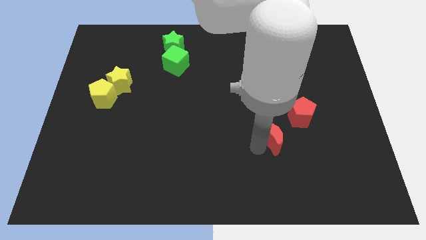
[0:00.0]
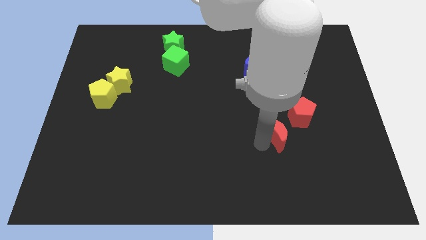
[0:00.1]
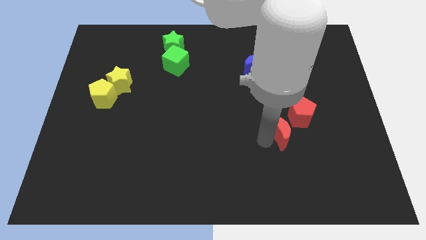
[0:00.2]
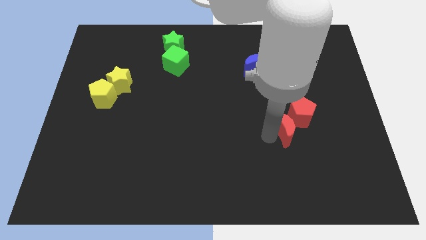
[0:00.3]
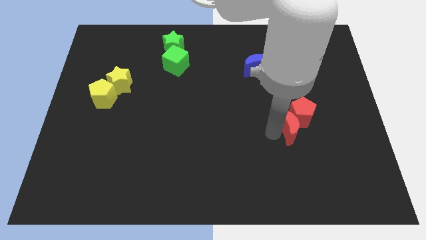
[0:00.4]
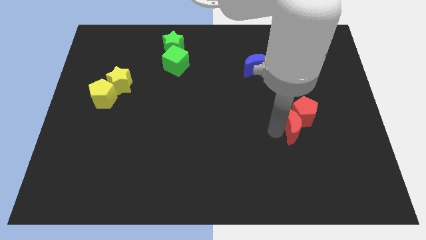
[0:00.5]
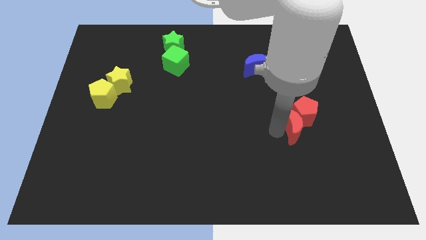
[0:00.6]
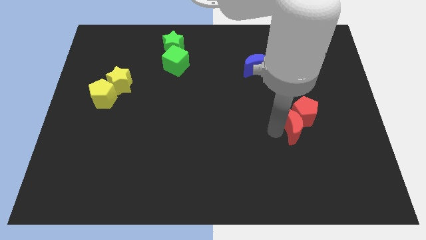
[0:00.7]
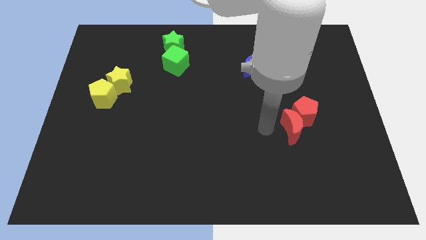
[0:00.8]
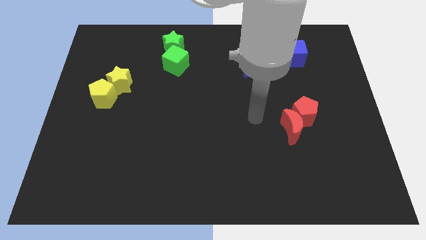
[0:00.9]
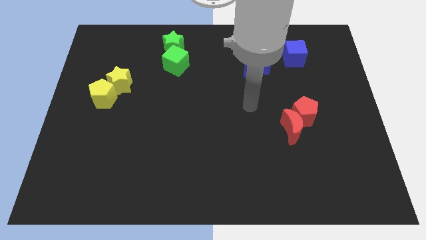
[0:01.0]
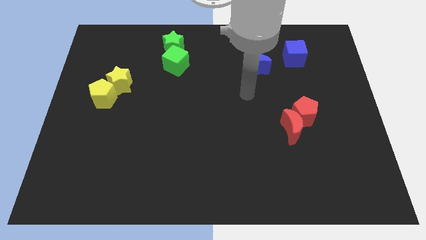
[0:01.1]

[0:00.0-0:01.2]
push the red crescent into red pentagon

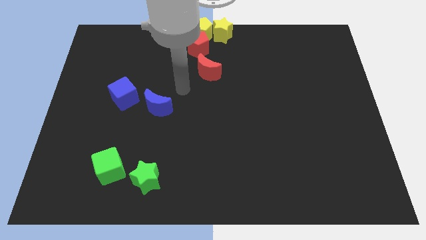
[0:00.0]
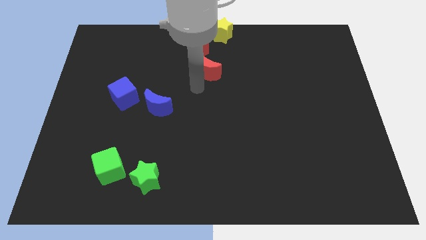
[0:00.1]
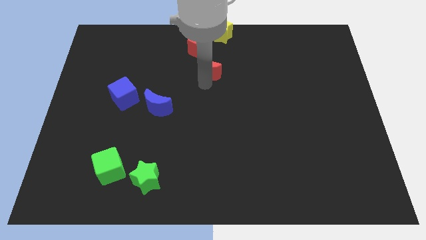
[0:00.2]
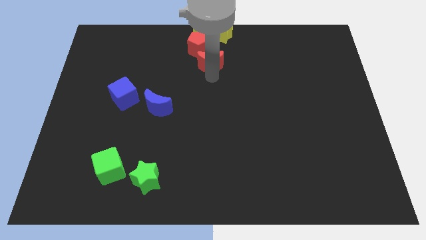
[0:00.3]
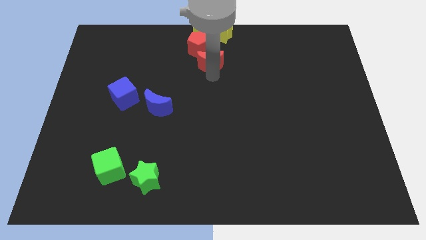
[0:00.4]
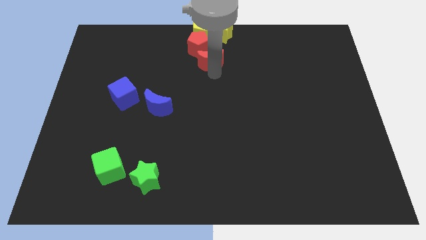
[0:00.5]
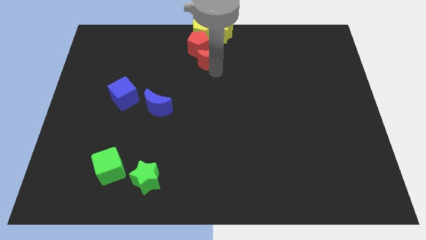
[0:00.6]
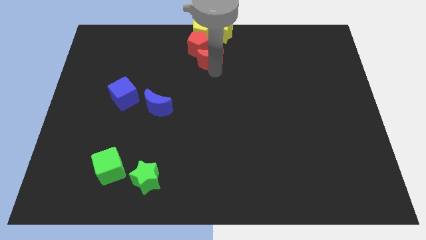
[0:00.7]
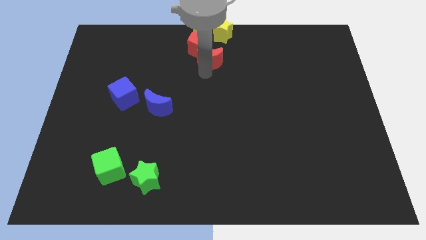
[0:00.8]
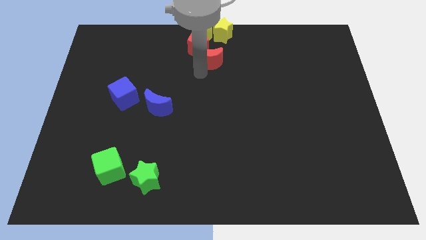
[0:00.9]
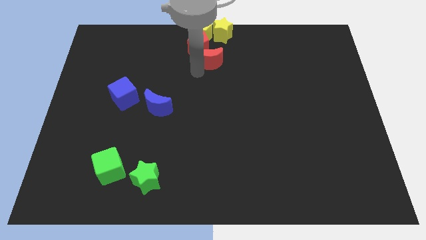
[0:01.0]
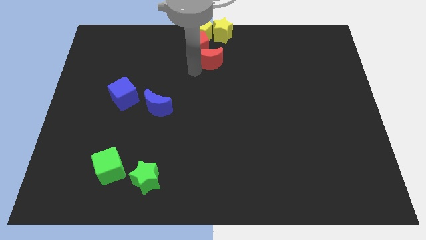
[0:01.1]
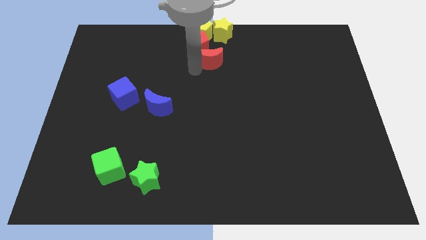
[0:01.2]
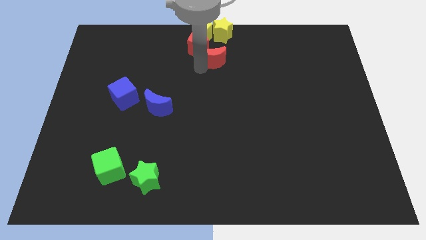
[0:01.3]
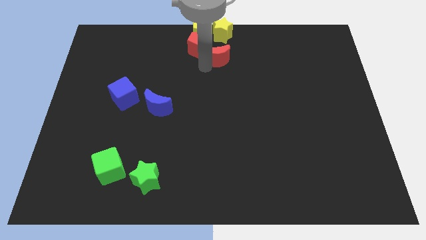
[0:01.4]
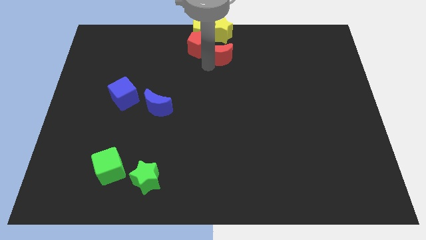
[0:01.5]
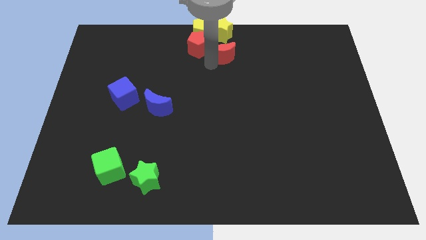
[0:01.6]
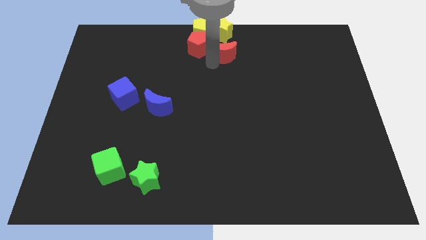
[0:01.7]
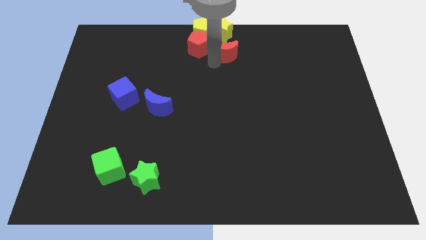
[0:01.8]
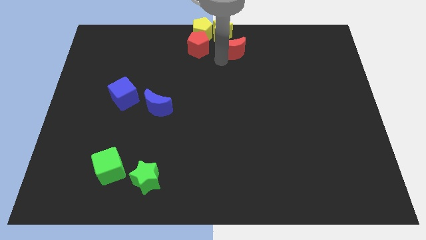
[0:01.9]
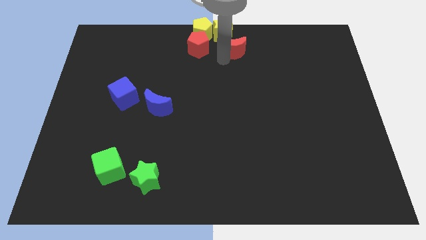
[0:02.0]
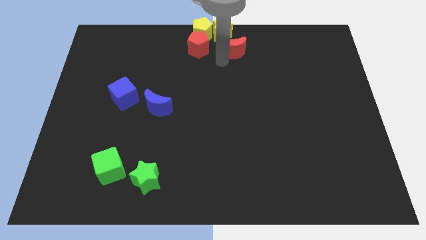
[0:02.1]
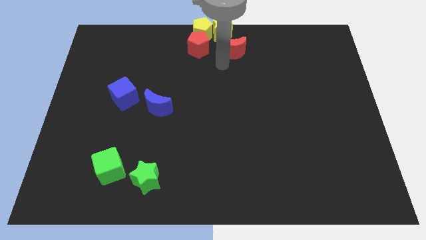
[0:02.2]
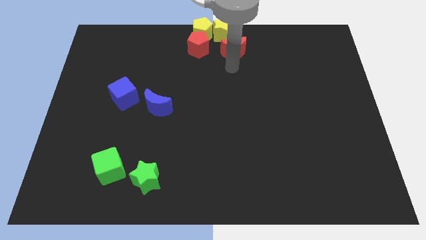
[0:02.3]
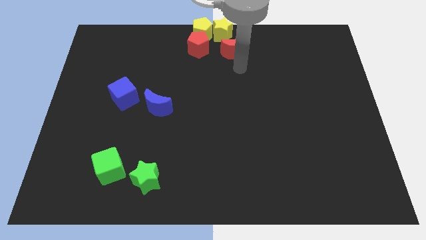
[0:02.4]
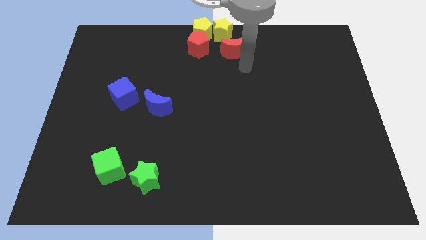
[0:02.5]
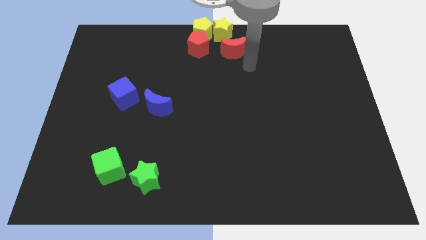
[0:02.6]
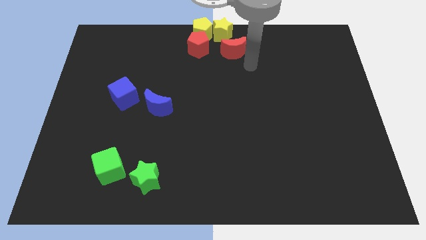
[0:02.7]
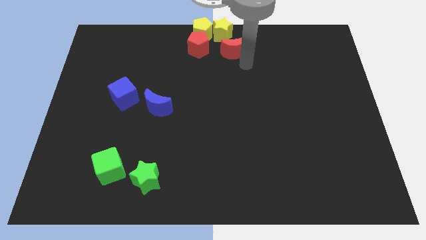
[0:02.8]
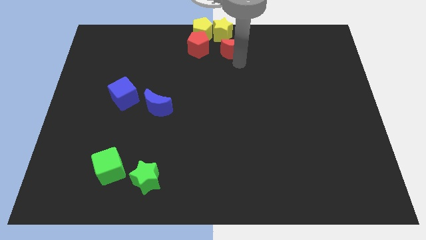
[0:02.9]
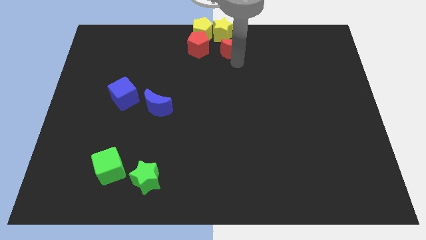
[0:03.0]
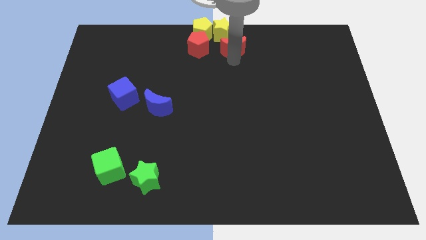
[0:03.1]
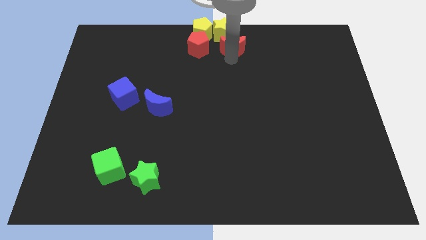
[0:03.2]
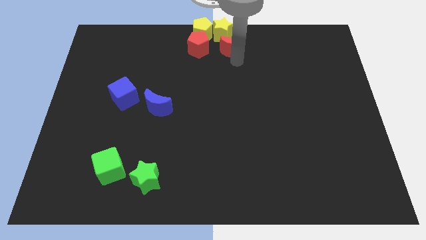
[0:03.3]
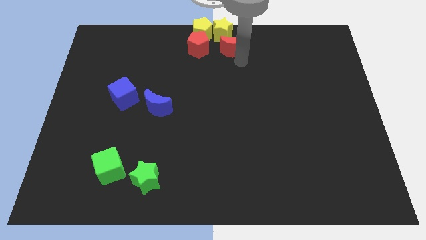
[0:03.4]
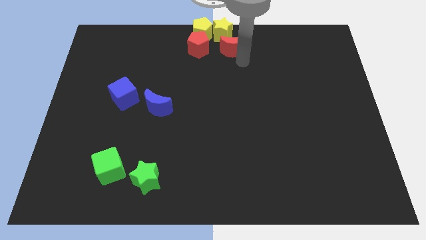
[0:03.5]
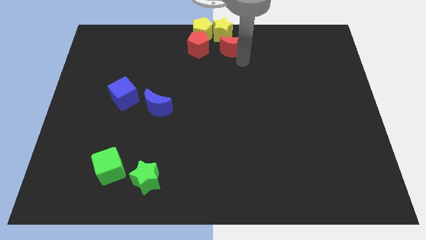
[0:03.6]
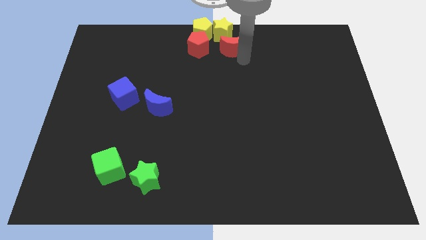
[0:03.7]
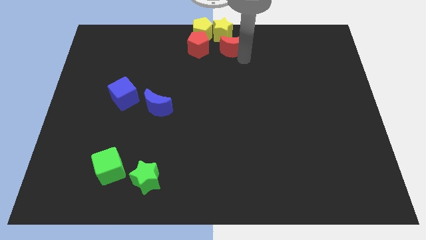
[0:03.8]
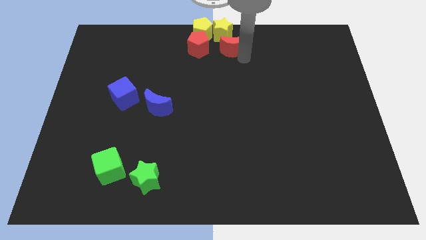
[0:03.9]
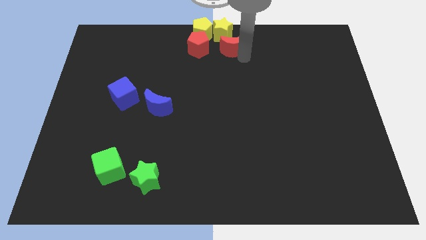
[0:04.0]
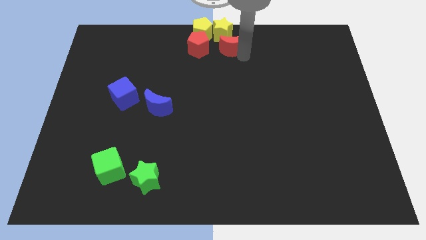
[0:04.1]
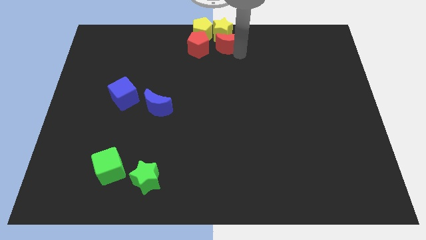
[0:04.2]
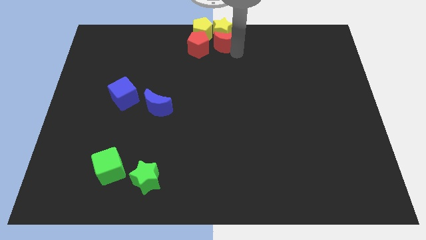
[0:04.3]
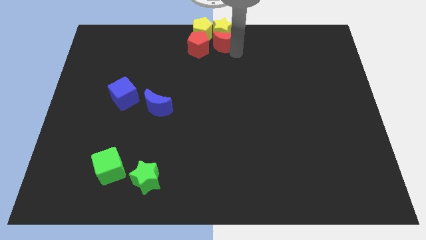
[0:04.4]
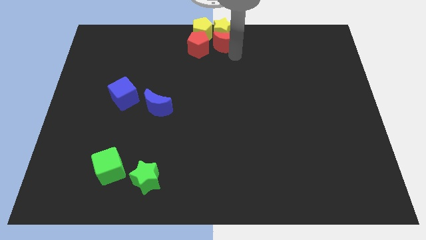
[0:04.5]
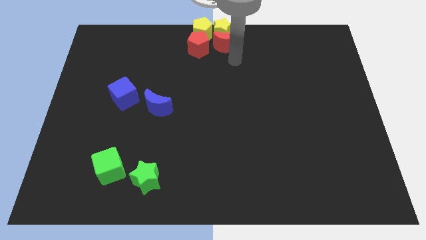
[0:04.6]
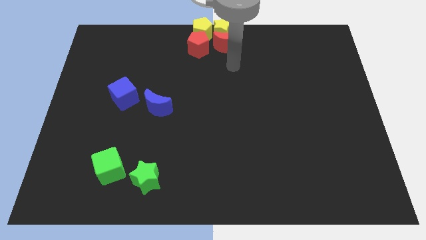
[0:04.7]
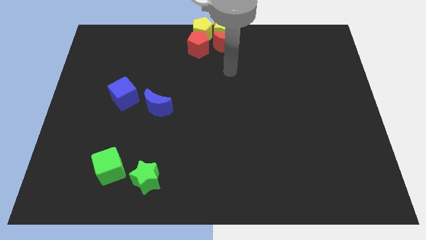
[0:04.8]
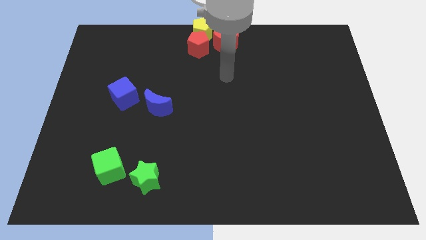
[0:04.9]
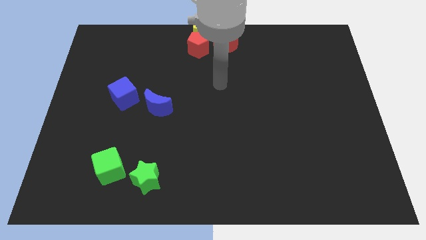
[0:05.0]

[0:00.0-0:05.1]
move red crescent into the yellow star

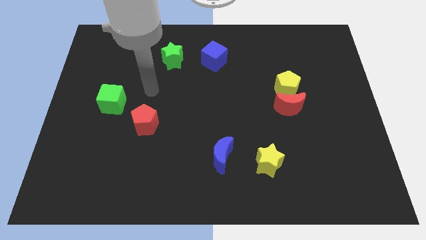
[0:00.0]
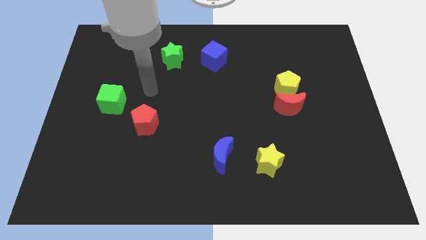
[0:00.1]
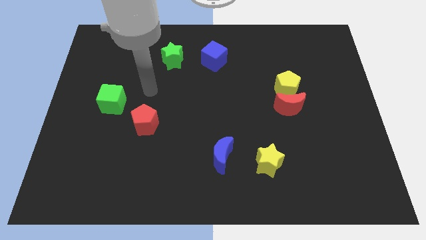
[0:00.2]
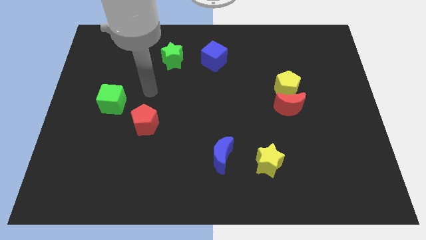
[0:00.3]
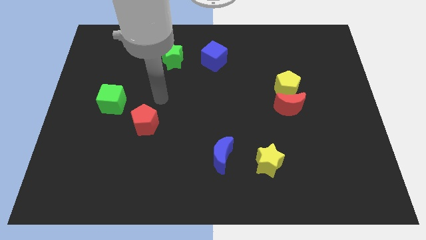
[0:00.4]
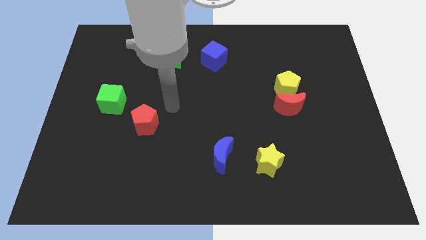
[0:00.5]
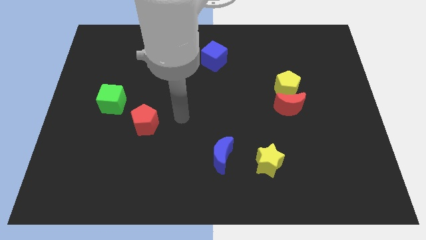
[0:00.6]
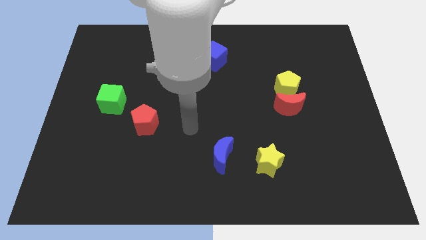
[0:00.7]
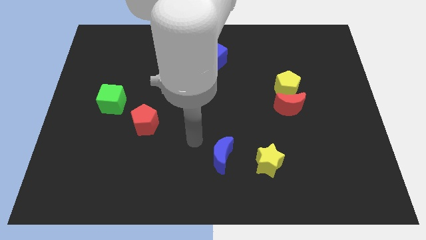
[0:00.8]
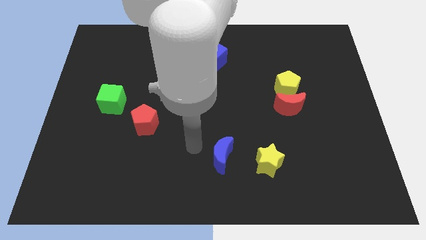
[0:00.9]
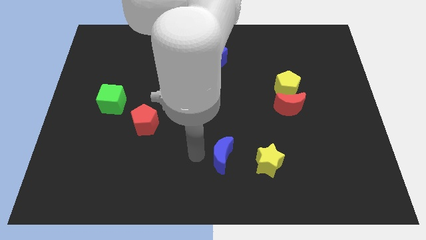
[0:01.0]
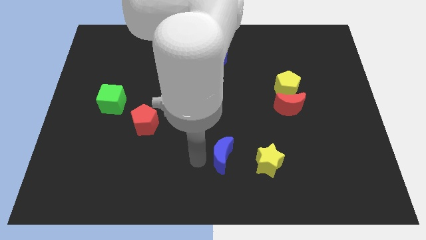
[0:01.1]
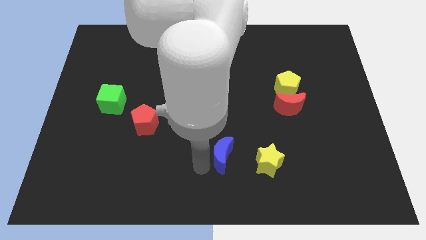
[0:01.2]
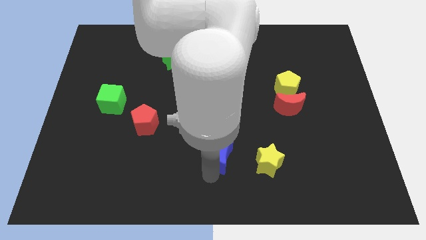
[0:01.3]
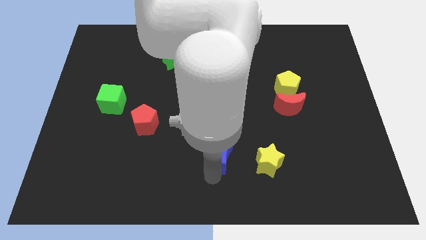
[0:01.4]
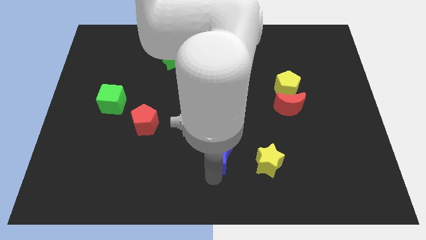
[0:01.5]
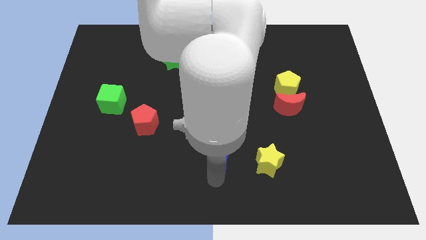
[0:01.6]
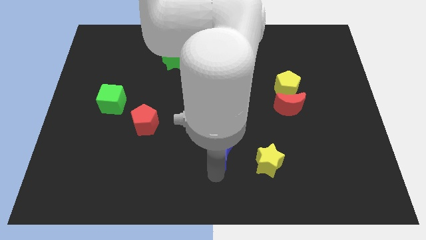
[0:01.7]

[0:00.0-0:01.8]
move your arm below the blue moon

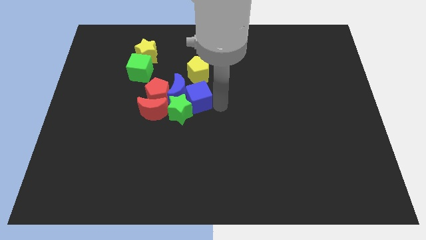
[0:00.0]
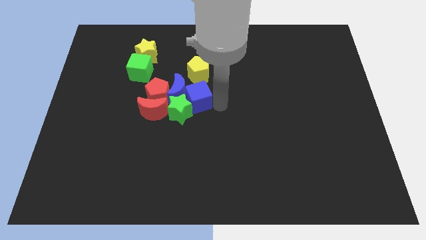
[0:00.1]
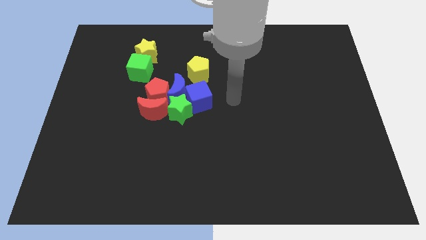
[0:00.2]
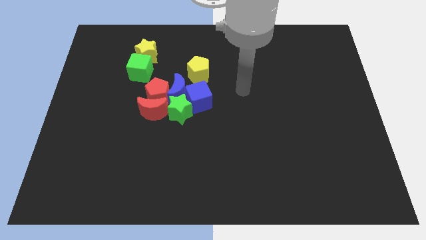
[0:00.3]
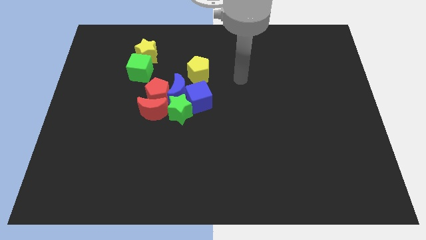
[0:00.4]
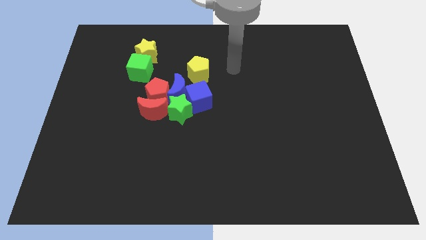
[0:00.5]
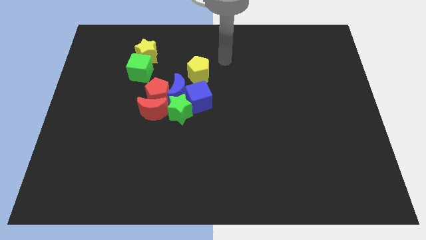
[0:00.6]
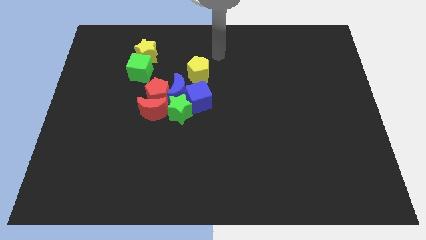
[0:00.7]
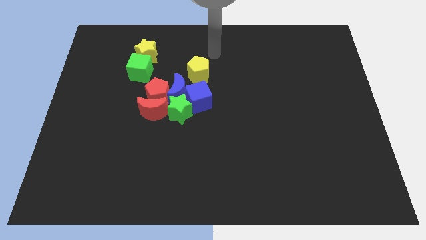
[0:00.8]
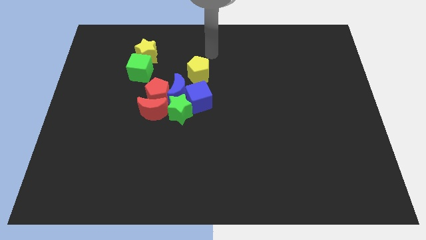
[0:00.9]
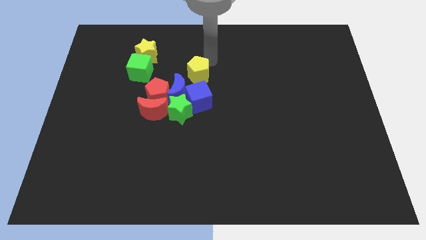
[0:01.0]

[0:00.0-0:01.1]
move your arm to the top right of yellow pentagon
